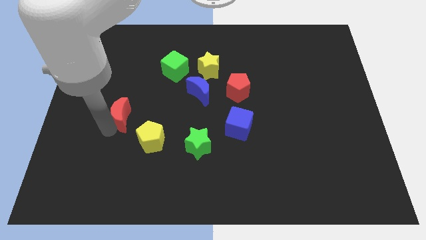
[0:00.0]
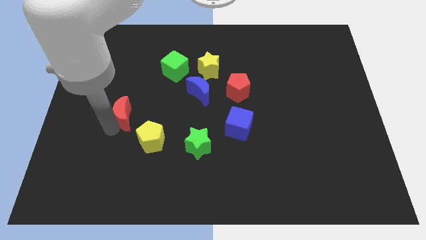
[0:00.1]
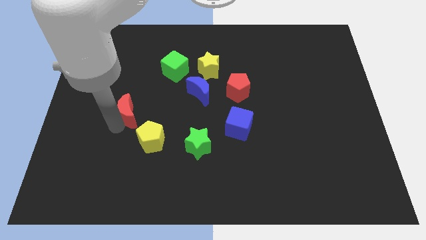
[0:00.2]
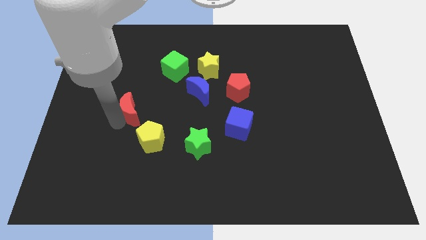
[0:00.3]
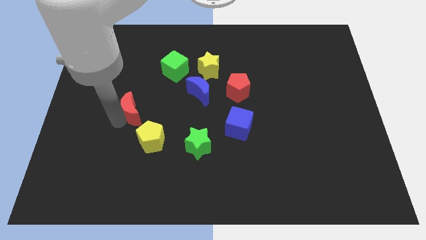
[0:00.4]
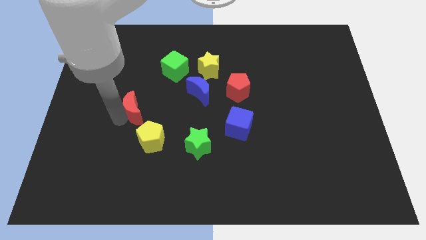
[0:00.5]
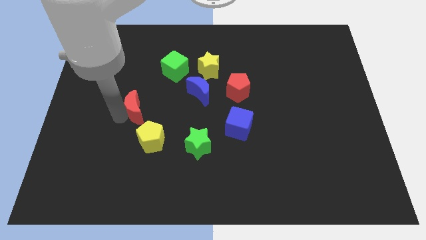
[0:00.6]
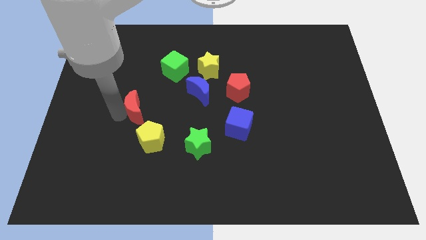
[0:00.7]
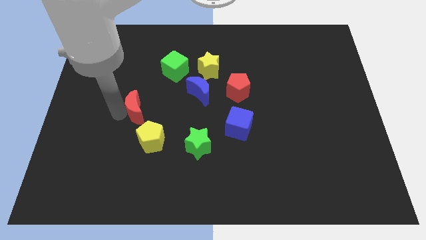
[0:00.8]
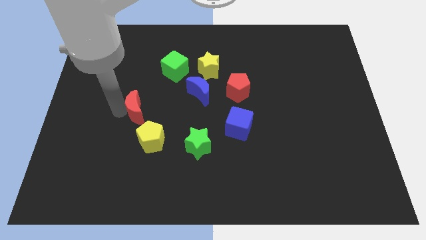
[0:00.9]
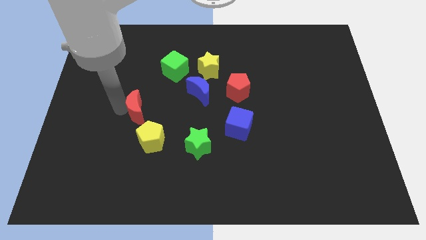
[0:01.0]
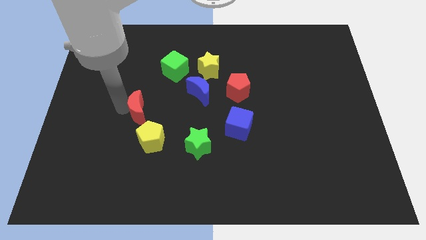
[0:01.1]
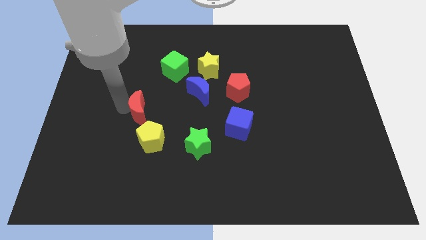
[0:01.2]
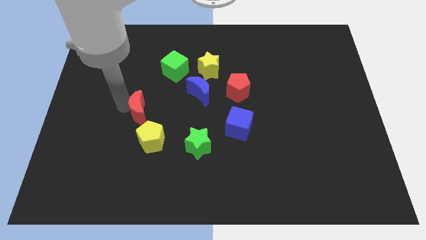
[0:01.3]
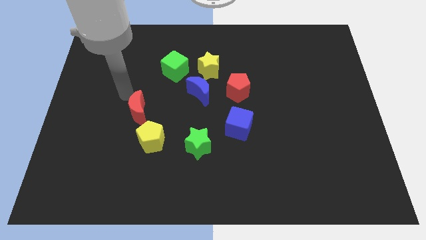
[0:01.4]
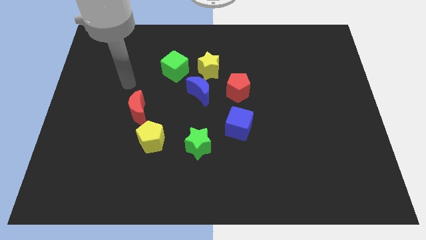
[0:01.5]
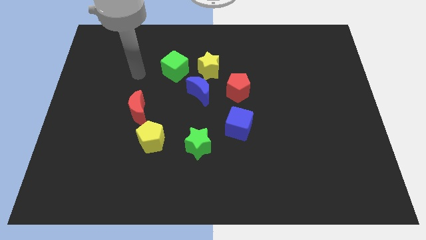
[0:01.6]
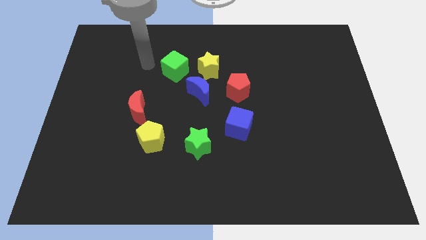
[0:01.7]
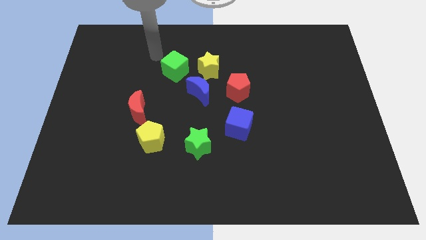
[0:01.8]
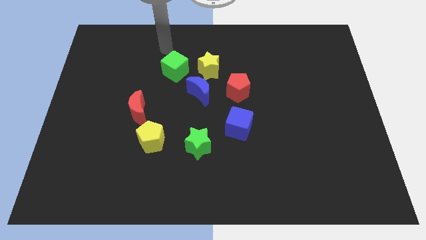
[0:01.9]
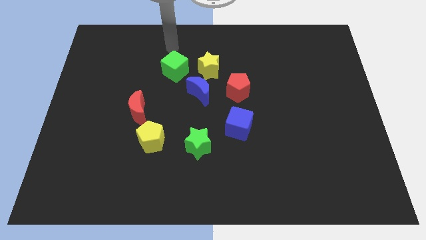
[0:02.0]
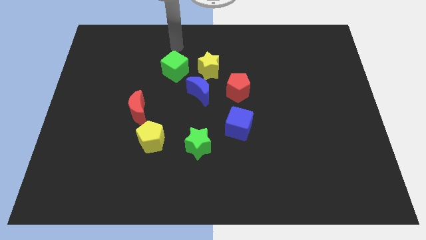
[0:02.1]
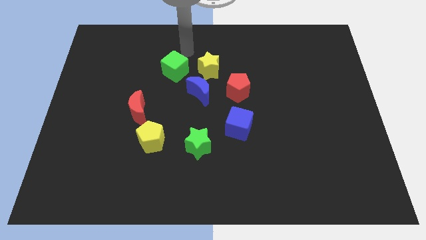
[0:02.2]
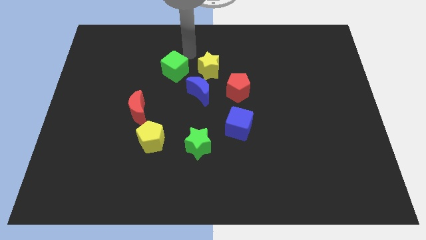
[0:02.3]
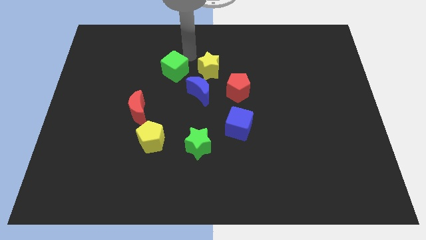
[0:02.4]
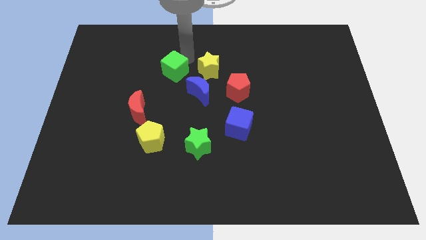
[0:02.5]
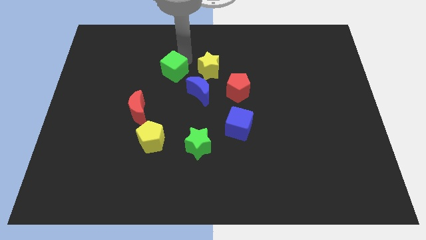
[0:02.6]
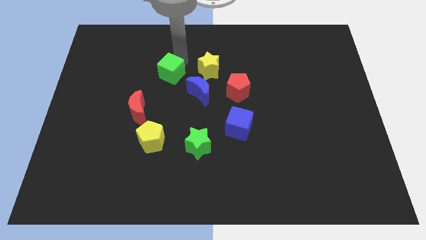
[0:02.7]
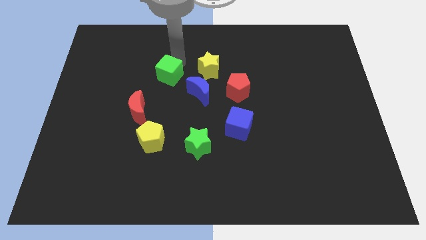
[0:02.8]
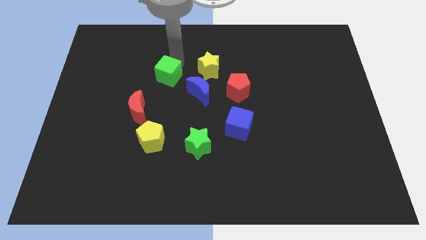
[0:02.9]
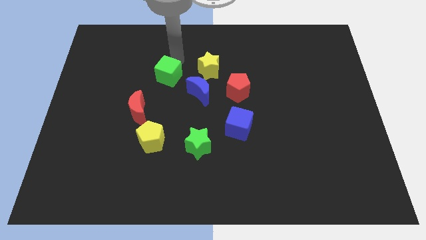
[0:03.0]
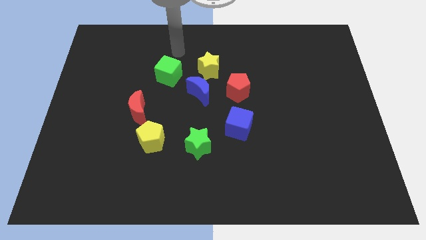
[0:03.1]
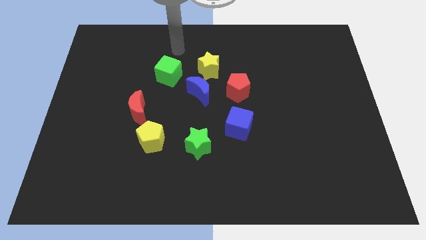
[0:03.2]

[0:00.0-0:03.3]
move the green cube slightly downwards

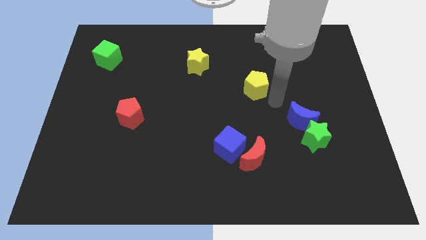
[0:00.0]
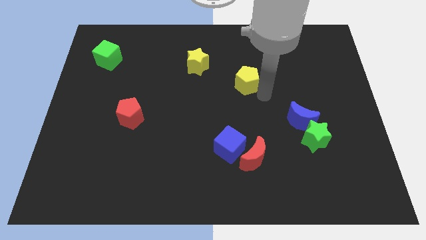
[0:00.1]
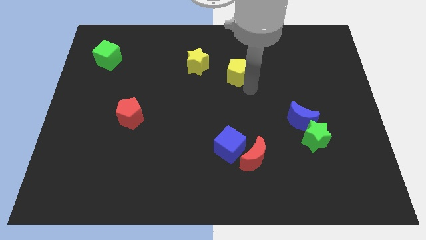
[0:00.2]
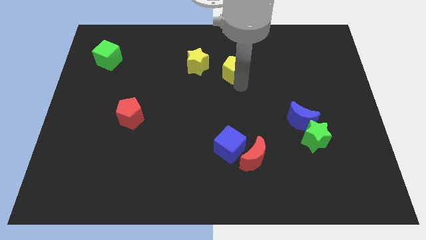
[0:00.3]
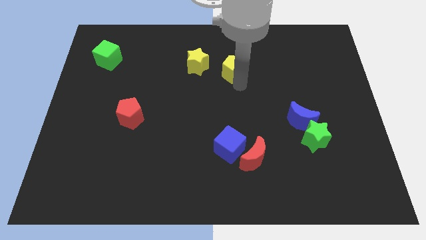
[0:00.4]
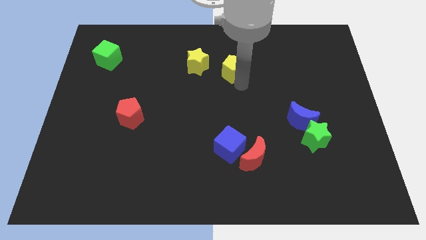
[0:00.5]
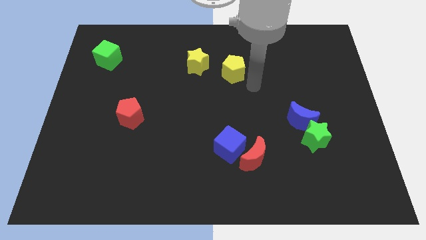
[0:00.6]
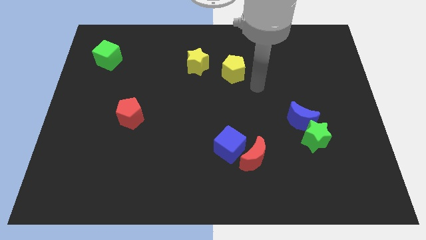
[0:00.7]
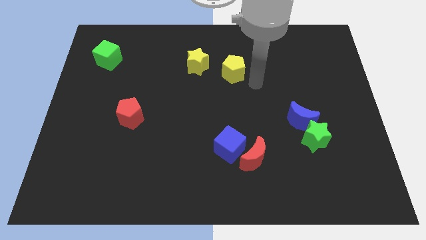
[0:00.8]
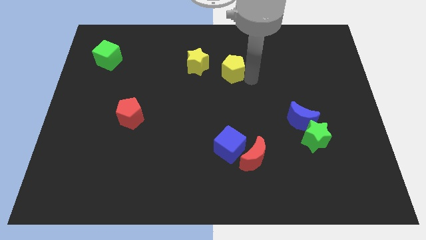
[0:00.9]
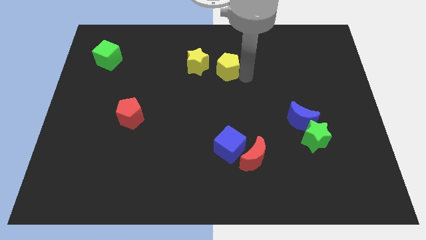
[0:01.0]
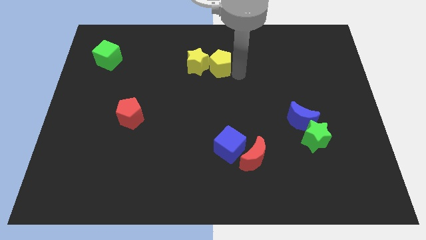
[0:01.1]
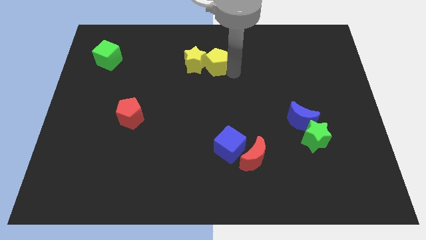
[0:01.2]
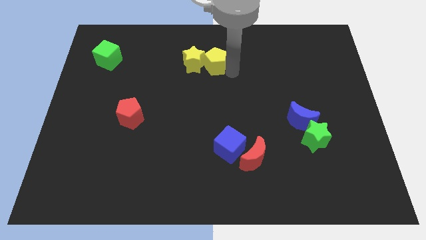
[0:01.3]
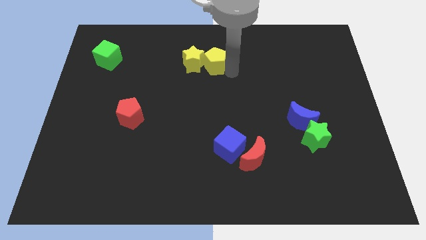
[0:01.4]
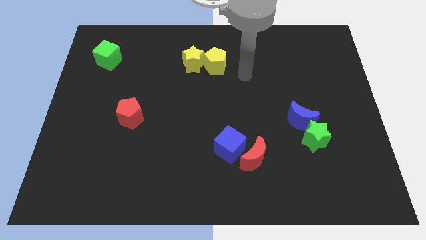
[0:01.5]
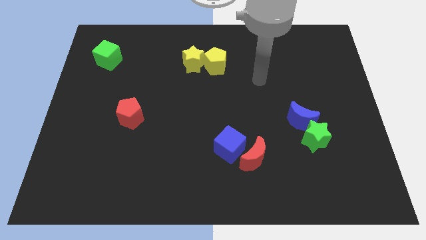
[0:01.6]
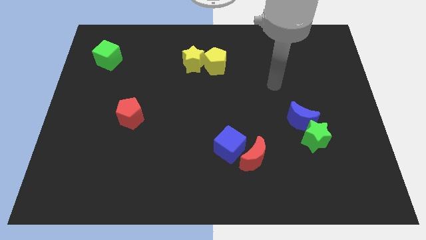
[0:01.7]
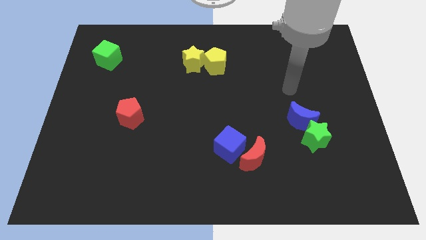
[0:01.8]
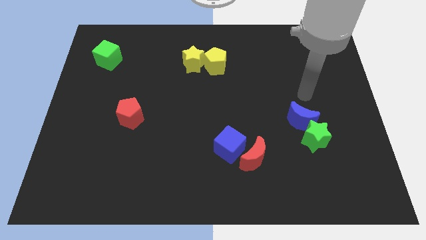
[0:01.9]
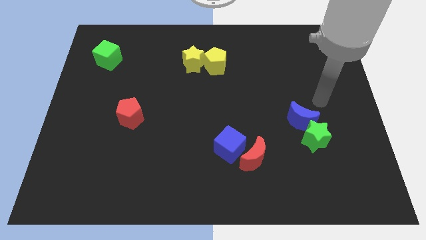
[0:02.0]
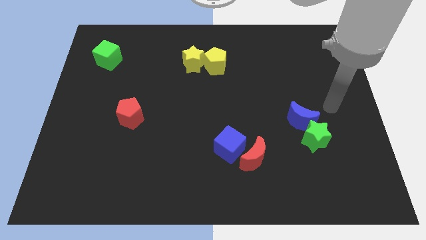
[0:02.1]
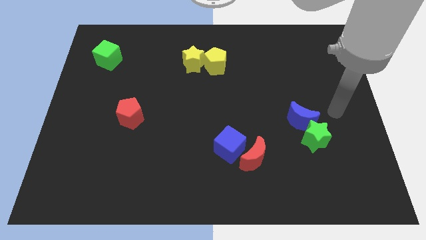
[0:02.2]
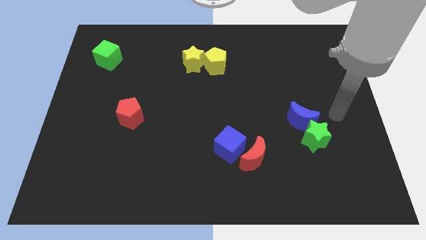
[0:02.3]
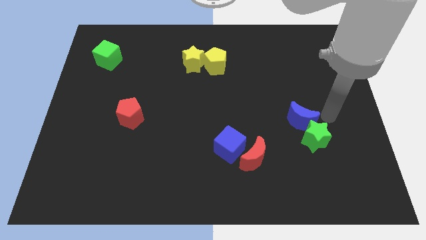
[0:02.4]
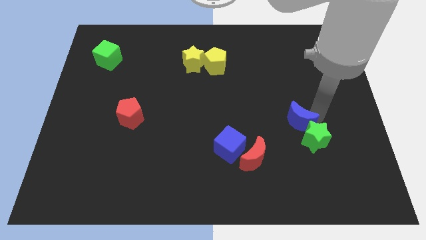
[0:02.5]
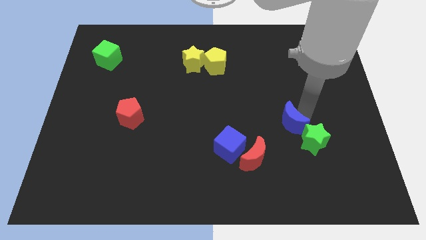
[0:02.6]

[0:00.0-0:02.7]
push the yellow star into the yellow pentagon

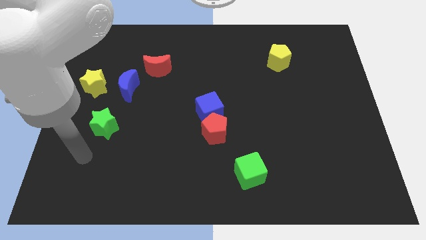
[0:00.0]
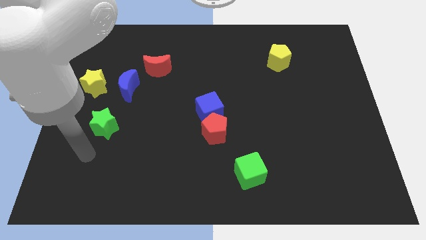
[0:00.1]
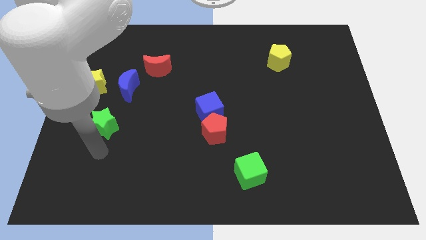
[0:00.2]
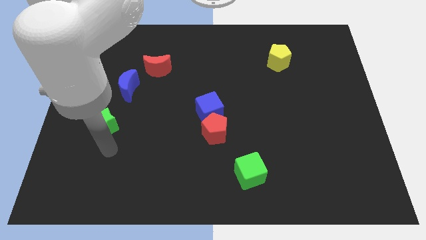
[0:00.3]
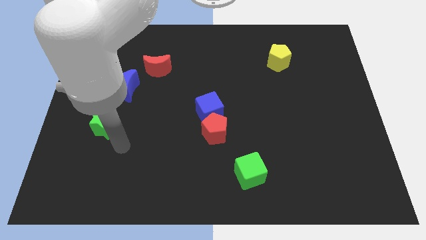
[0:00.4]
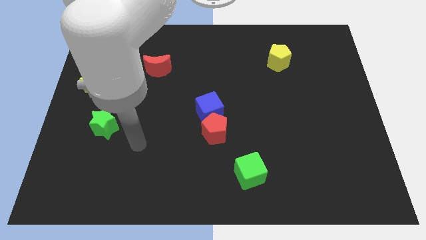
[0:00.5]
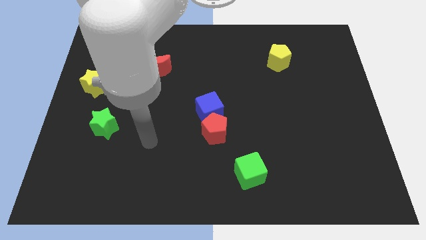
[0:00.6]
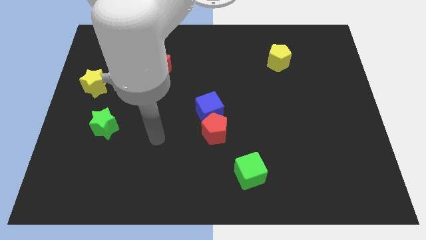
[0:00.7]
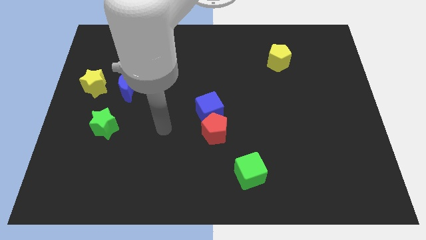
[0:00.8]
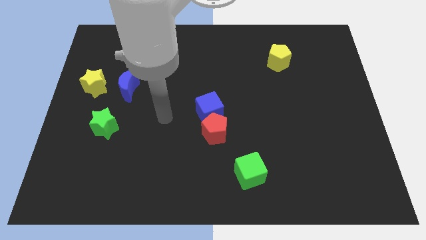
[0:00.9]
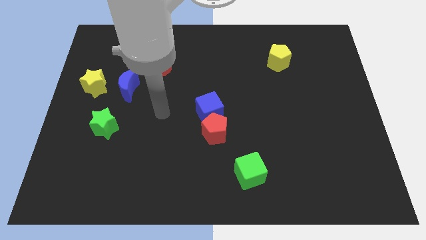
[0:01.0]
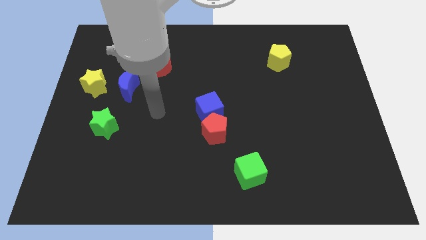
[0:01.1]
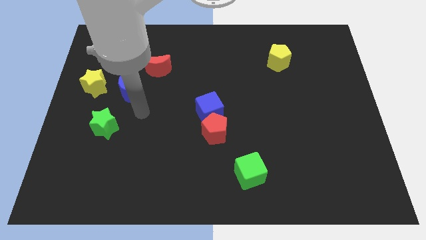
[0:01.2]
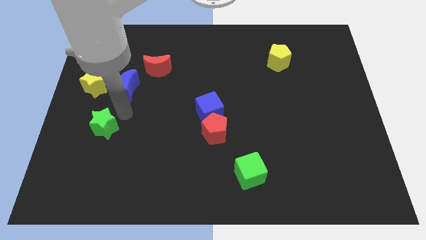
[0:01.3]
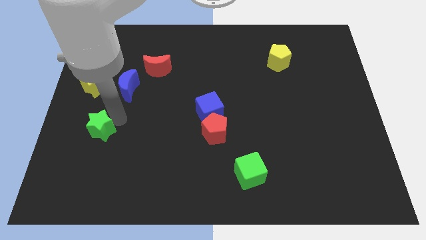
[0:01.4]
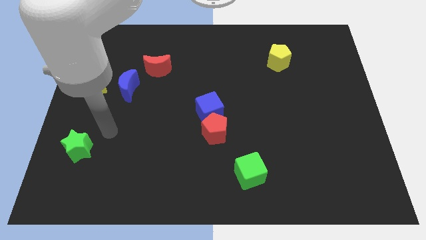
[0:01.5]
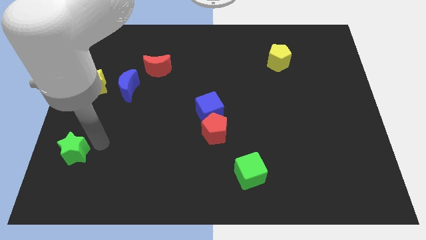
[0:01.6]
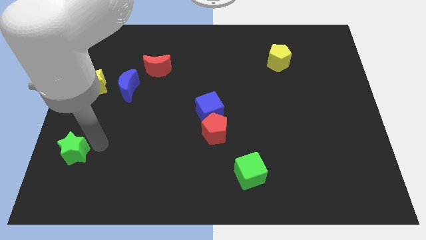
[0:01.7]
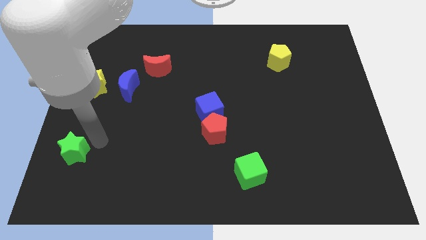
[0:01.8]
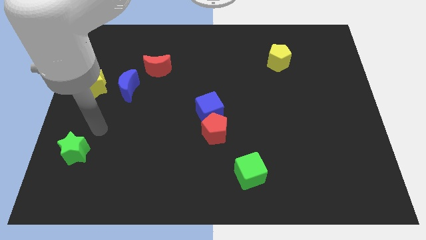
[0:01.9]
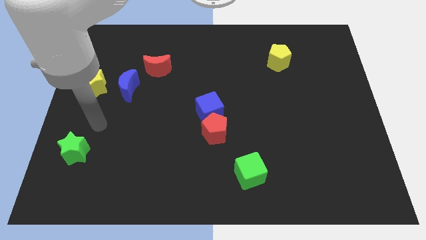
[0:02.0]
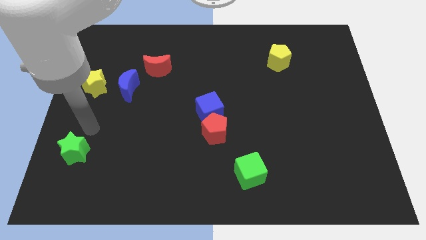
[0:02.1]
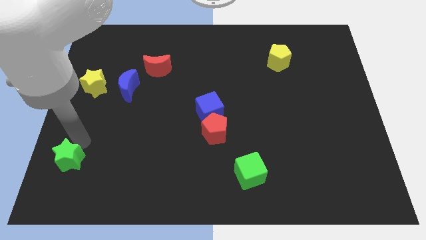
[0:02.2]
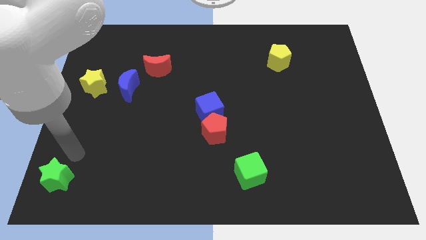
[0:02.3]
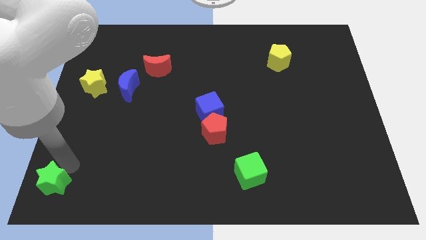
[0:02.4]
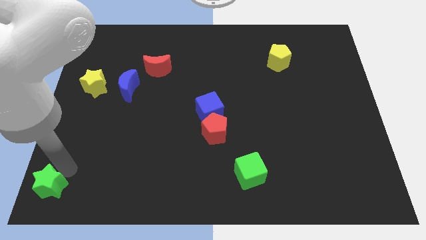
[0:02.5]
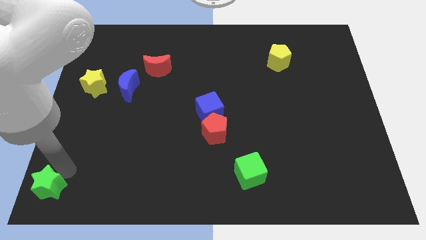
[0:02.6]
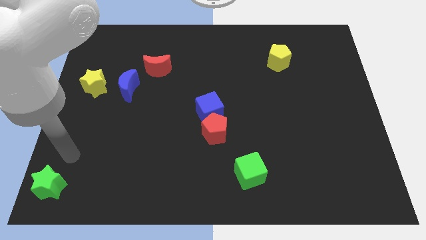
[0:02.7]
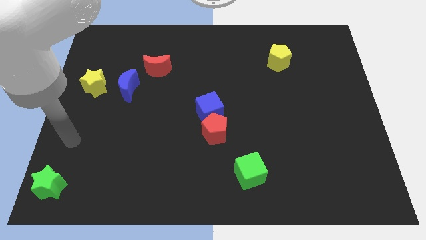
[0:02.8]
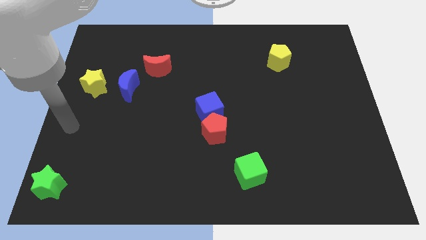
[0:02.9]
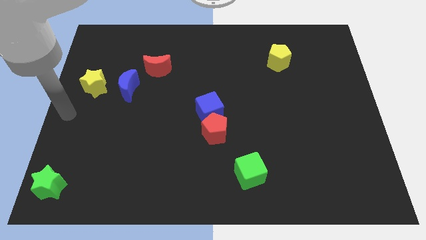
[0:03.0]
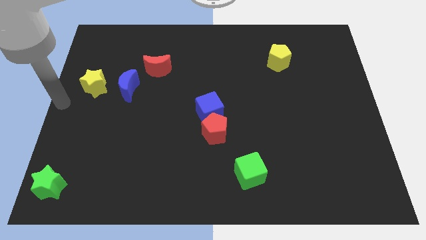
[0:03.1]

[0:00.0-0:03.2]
slide the green star diagonally bottom left to the blue moon
